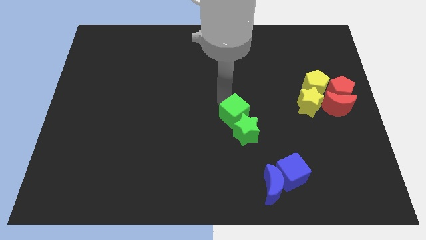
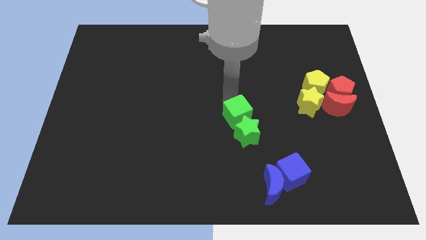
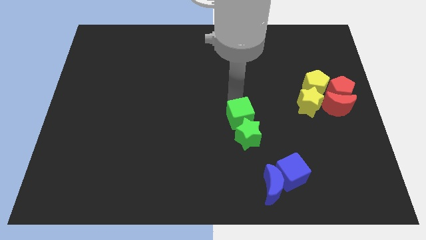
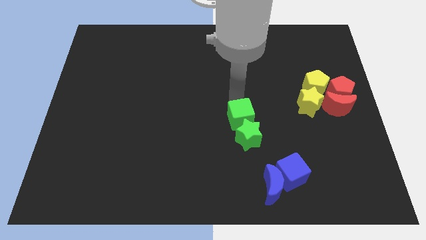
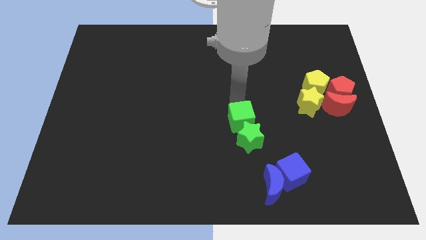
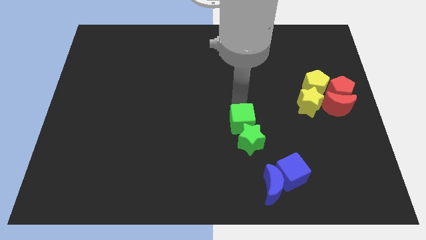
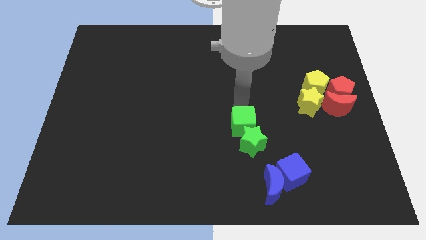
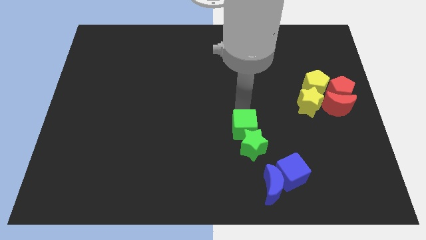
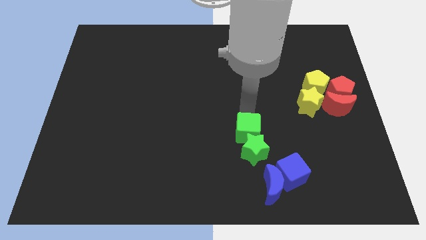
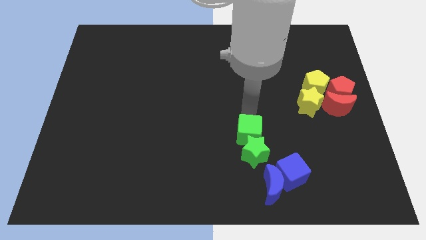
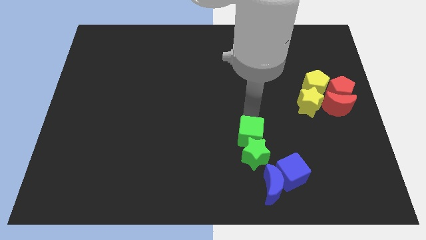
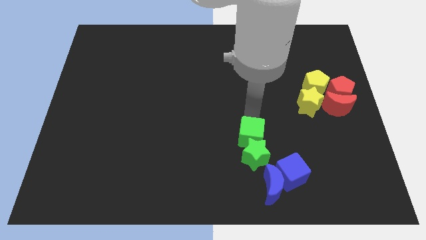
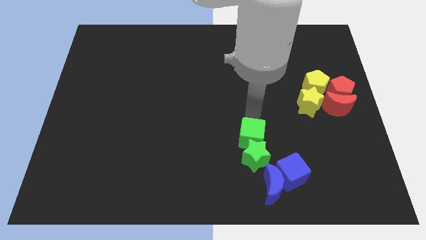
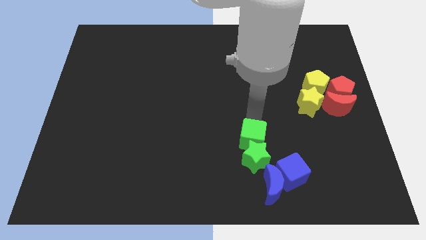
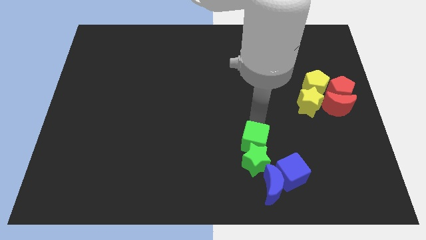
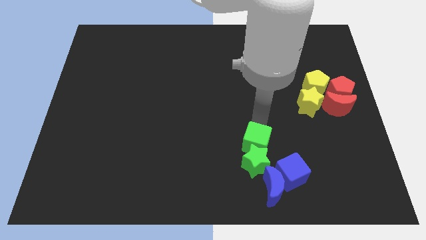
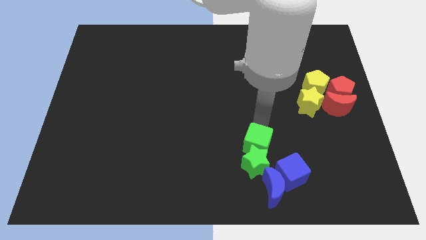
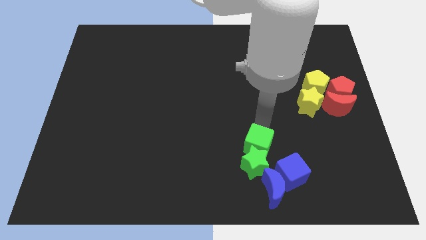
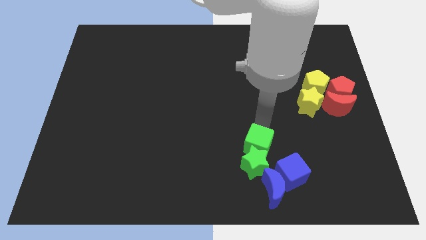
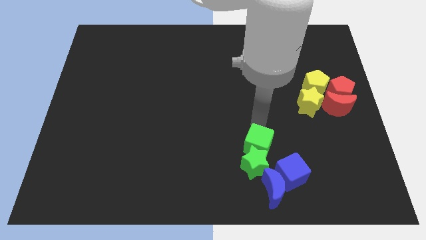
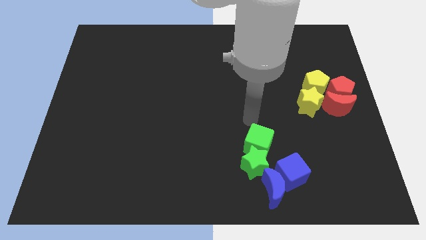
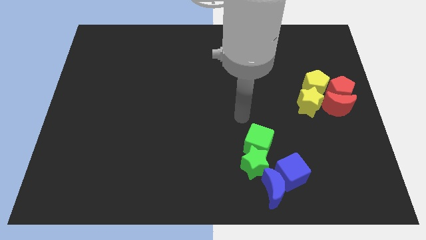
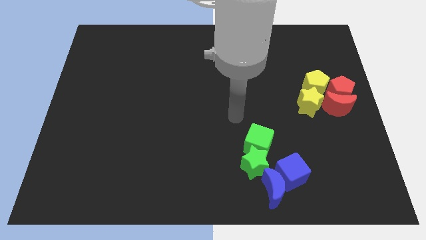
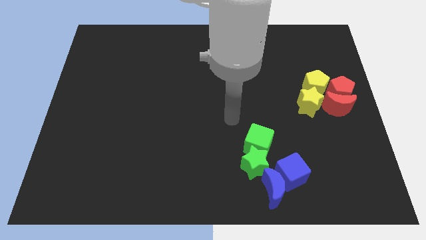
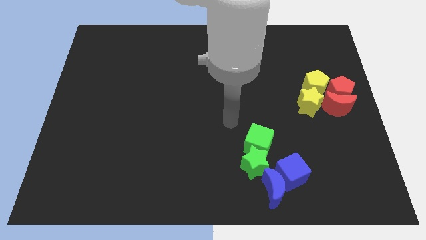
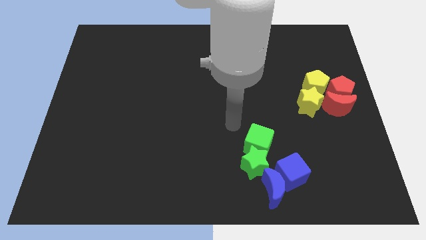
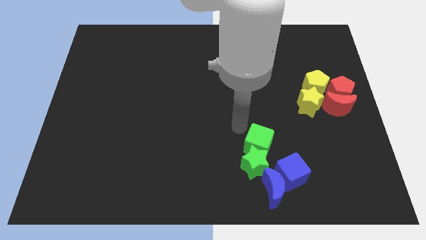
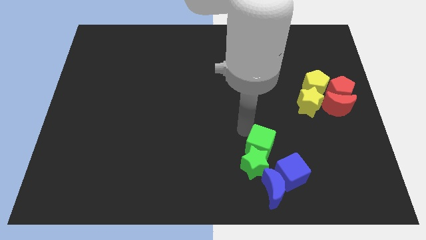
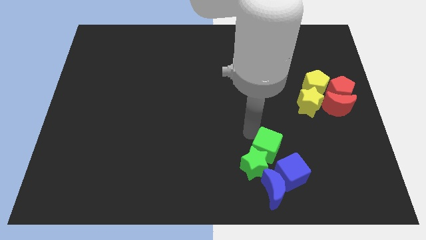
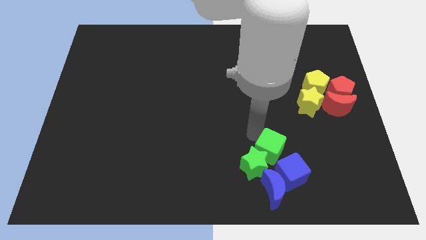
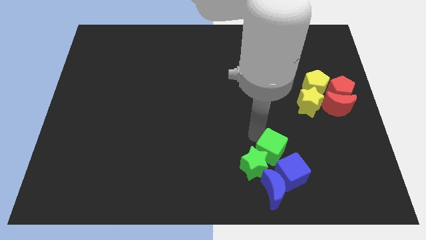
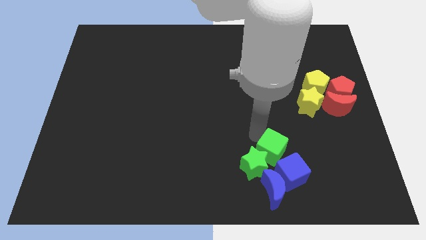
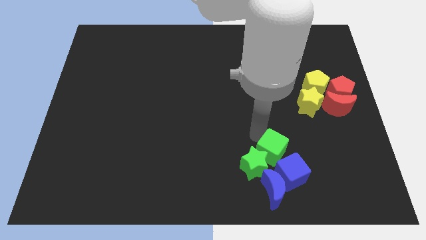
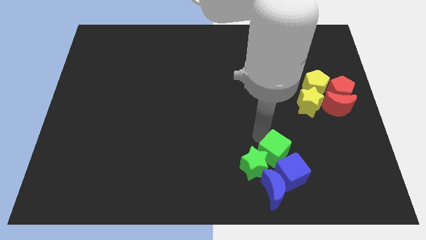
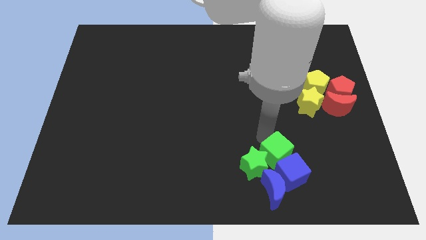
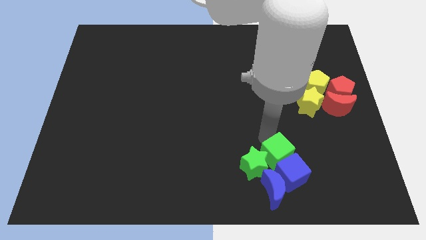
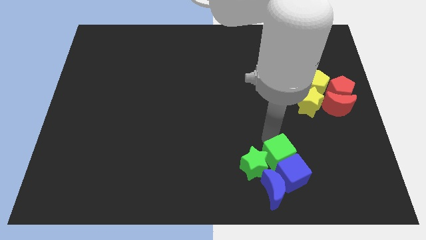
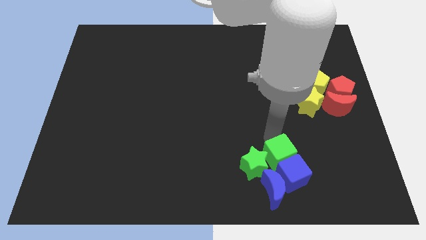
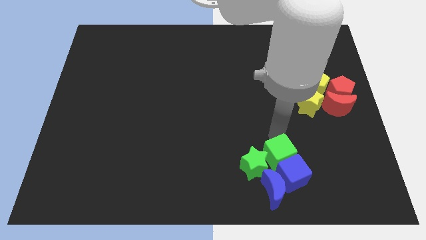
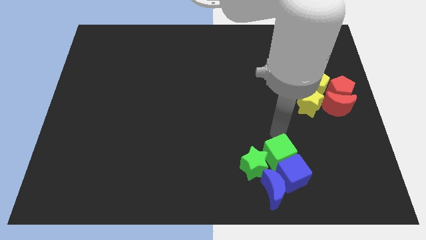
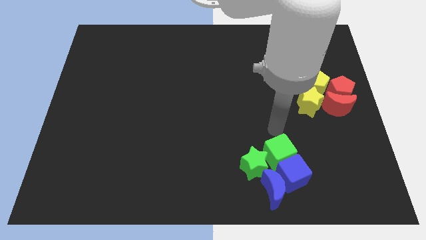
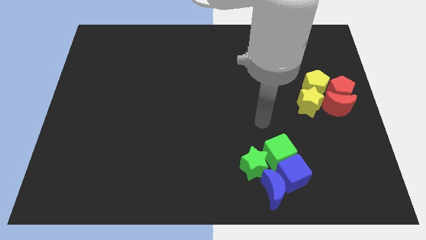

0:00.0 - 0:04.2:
move the green cube above the blue cube

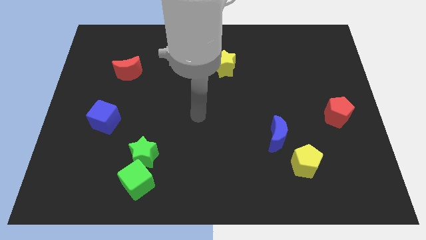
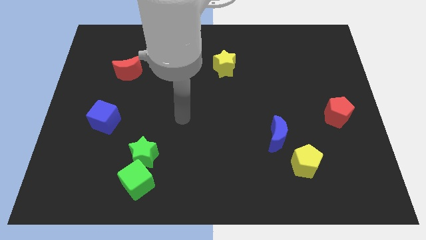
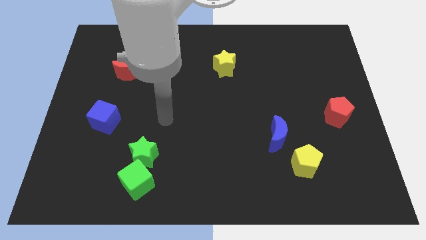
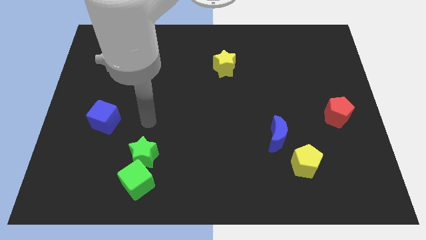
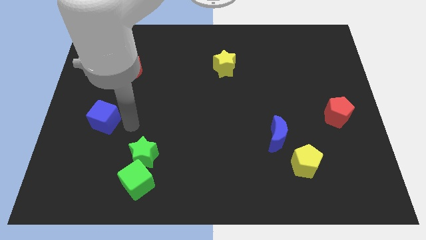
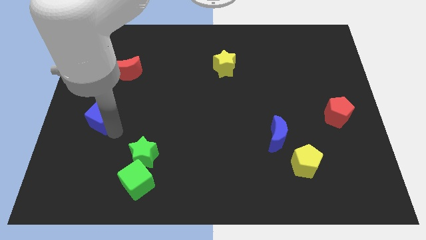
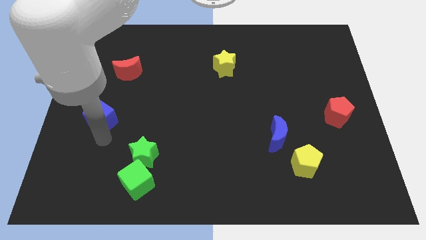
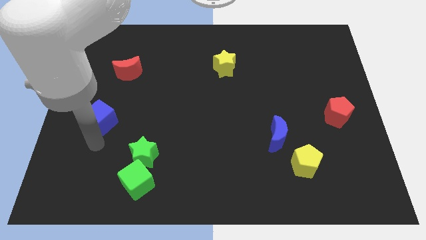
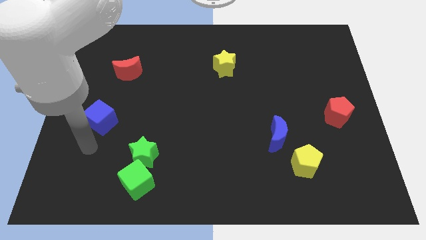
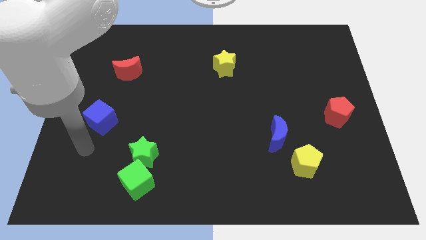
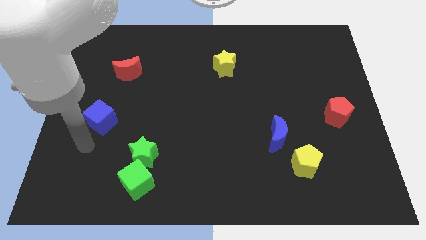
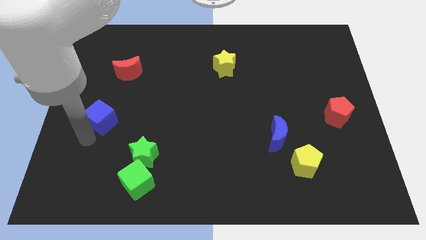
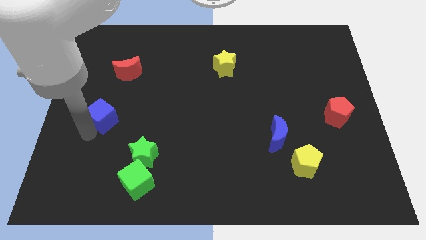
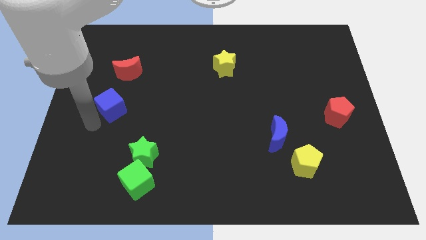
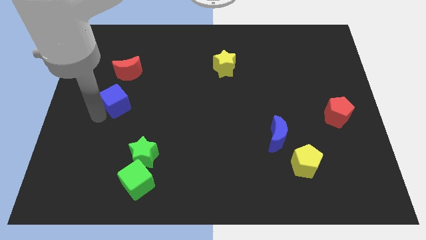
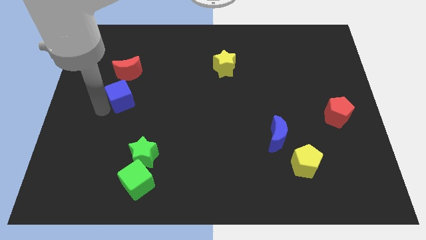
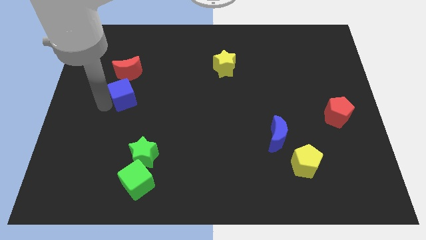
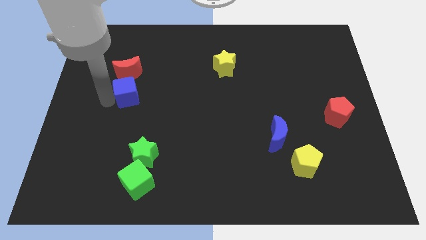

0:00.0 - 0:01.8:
place blue cube to the bottom of red moon

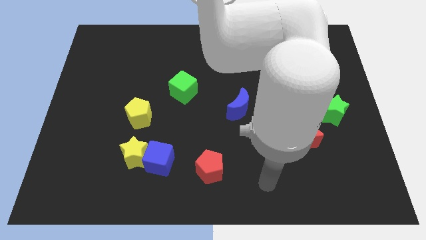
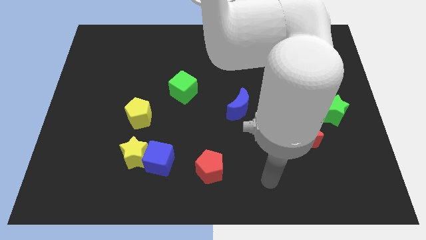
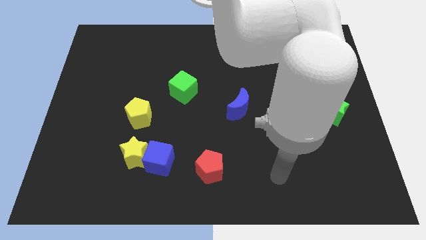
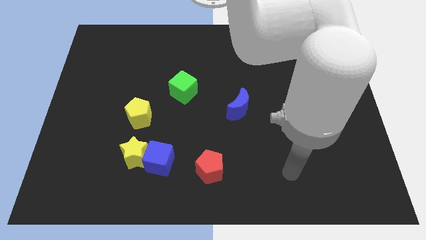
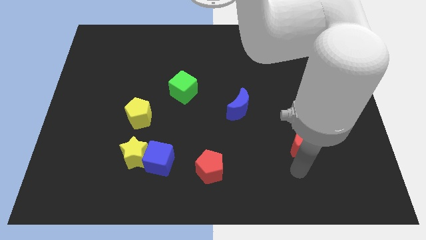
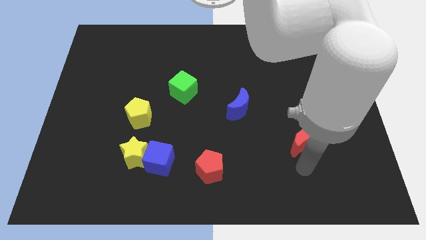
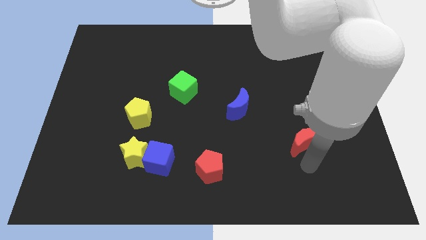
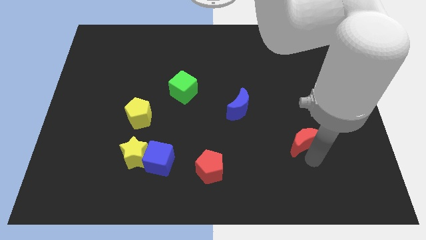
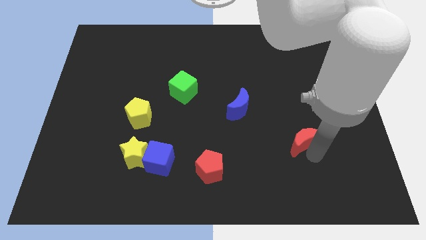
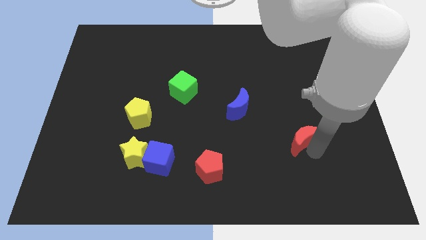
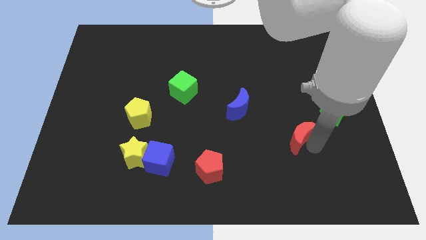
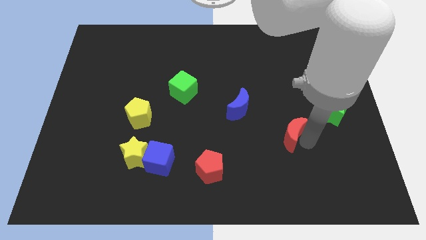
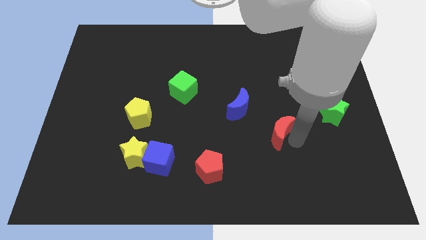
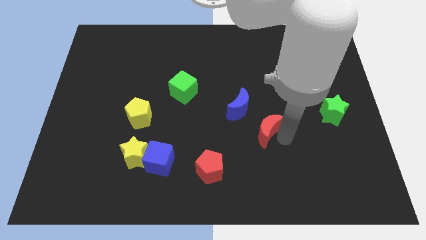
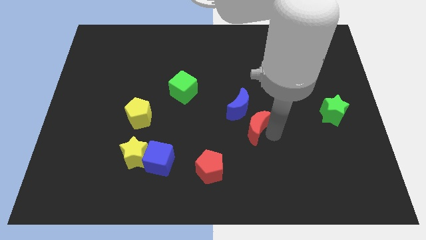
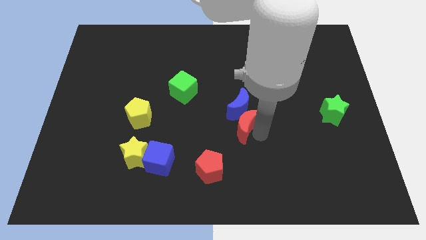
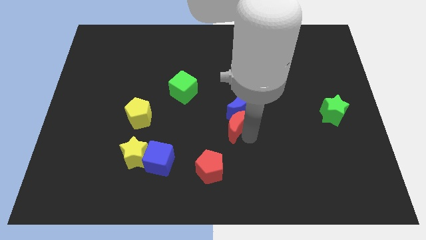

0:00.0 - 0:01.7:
move the red crescent below the blue crescent

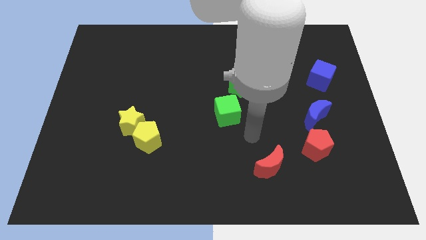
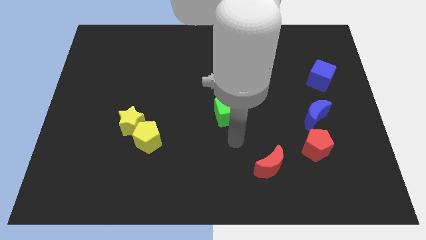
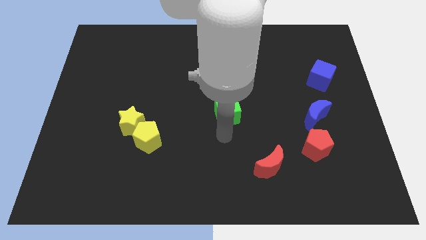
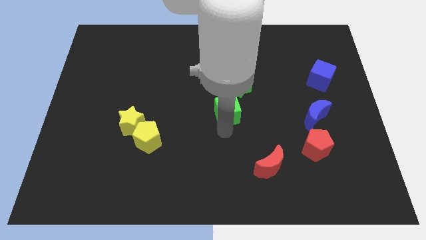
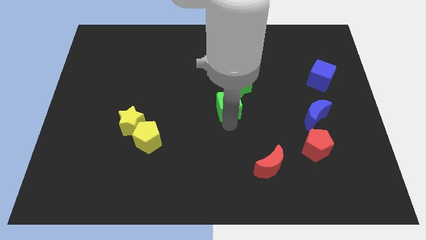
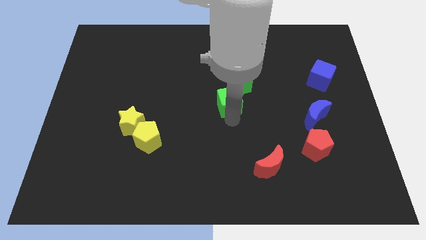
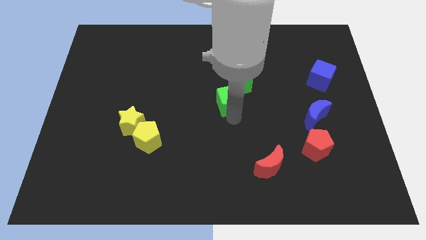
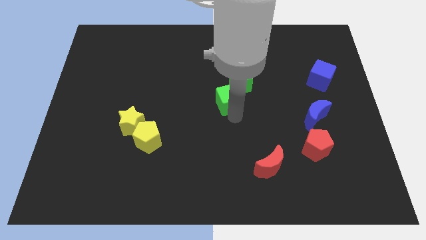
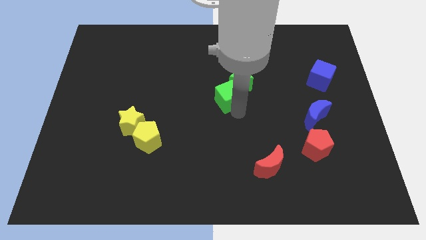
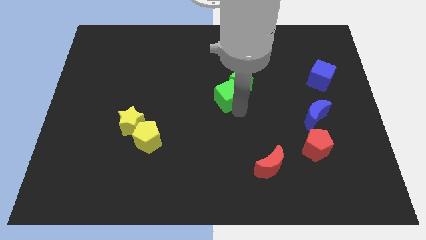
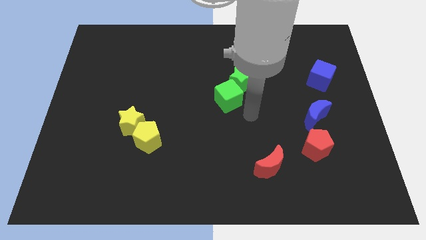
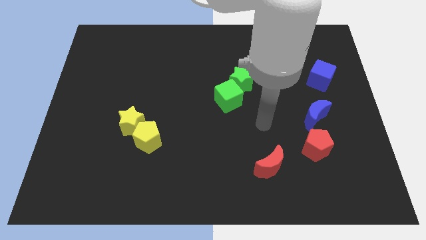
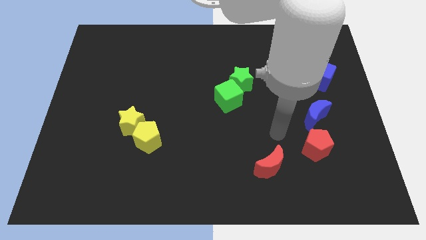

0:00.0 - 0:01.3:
attach the green cube to the green star
